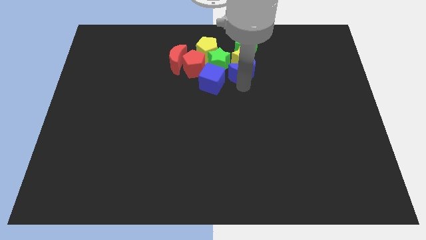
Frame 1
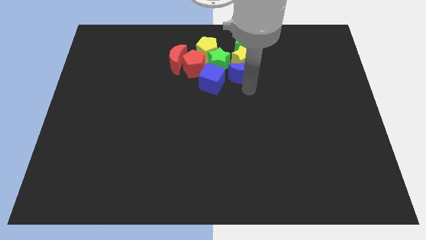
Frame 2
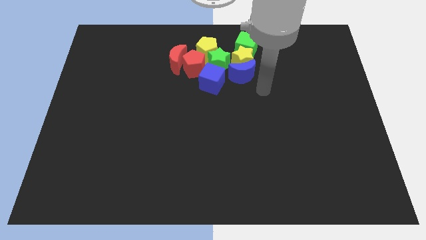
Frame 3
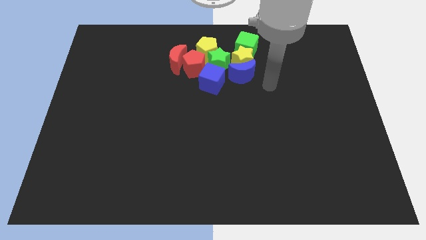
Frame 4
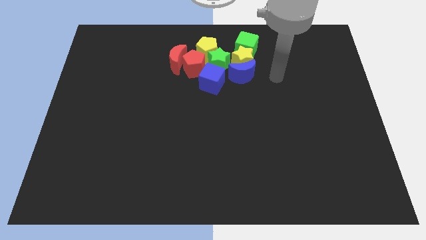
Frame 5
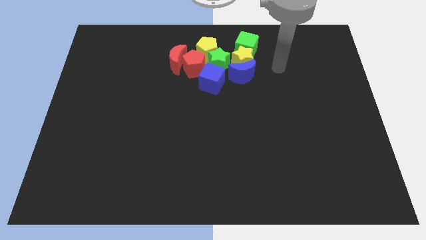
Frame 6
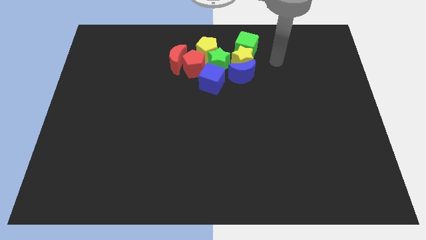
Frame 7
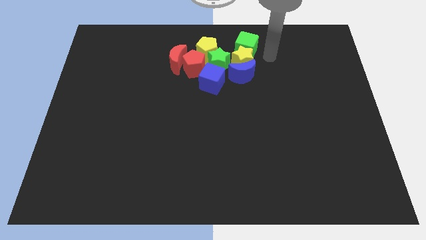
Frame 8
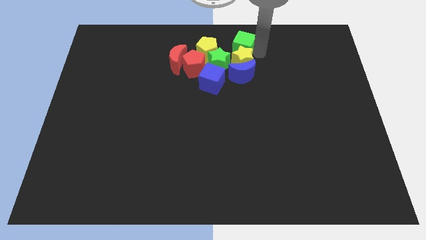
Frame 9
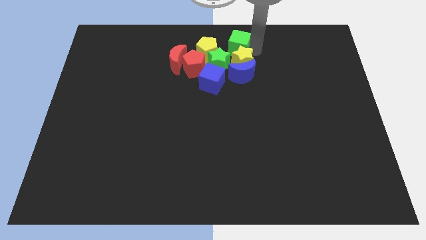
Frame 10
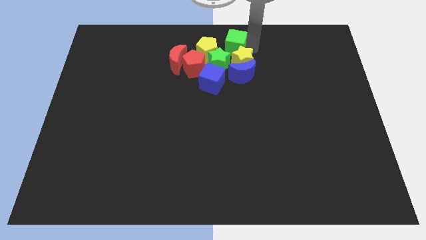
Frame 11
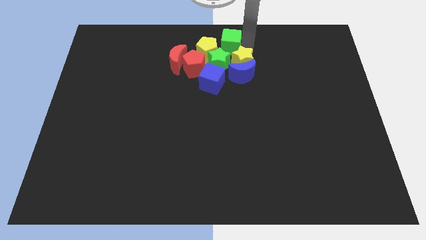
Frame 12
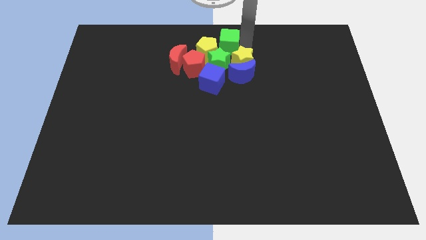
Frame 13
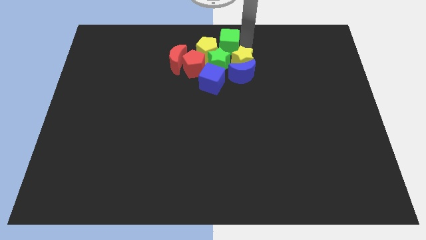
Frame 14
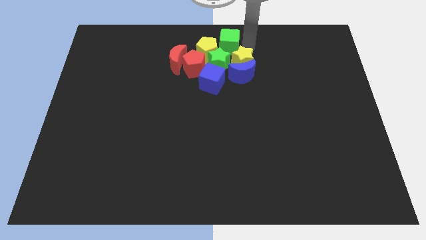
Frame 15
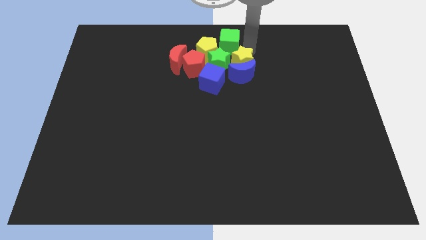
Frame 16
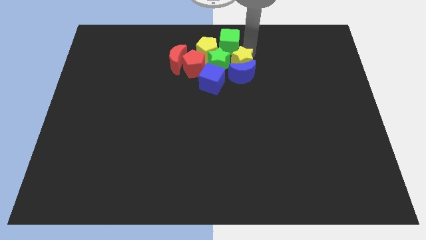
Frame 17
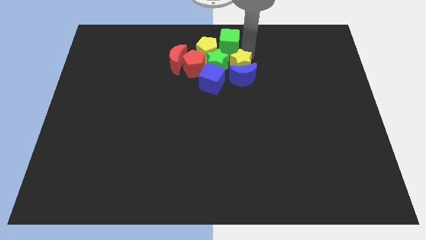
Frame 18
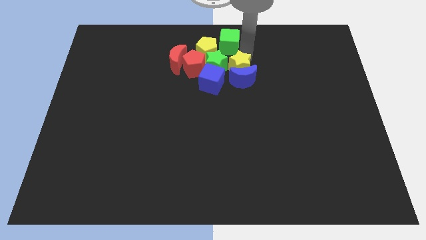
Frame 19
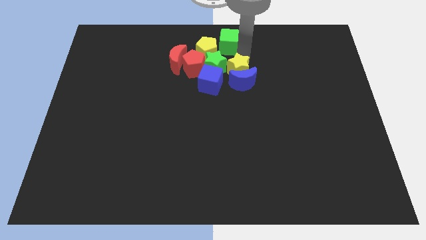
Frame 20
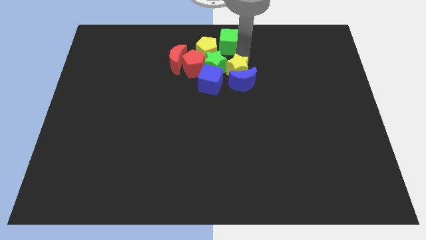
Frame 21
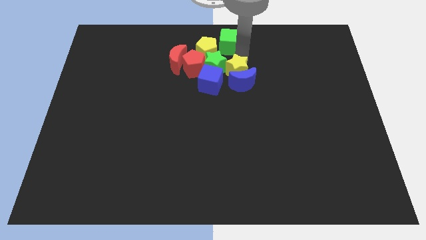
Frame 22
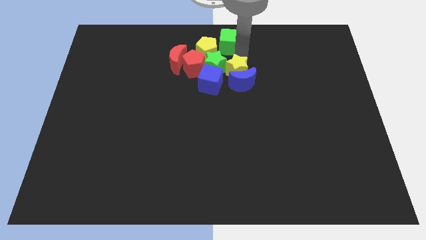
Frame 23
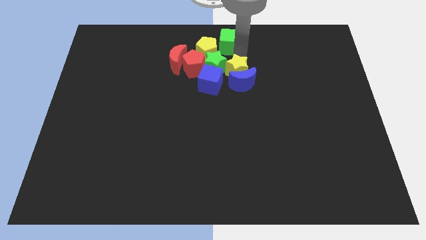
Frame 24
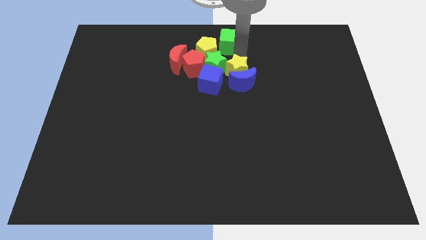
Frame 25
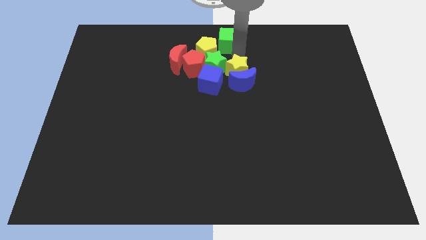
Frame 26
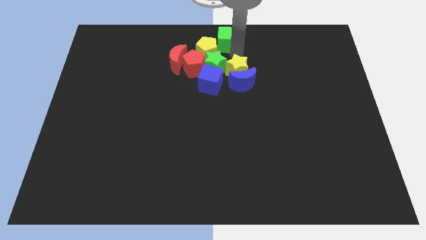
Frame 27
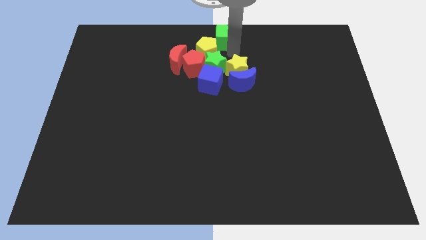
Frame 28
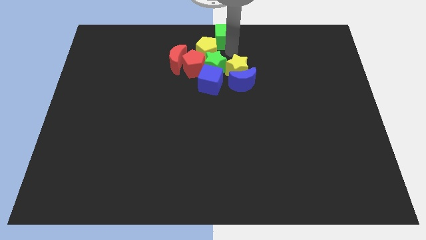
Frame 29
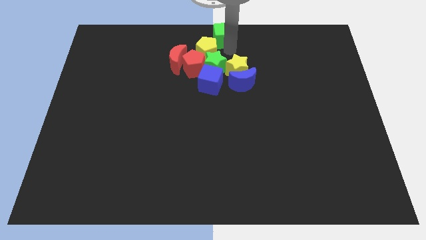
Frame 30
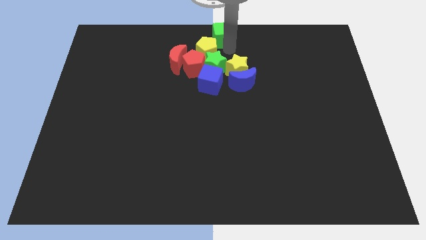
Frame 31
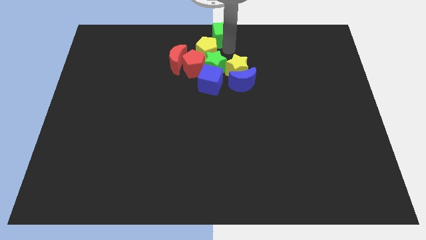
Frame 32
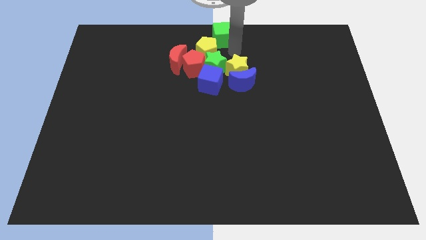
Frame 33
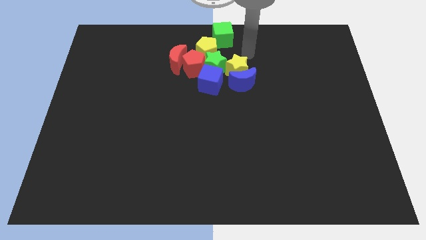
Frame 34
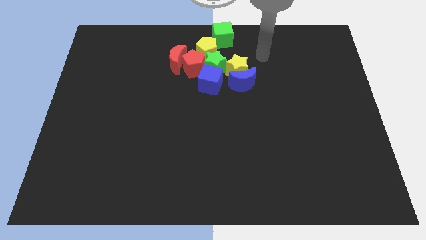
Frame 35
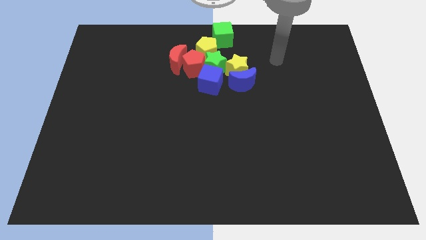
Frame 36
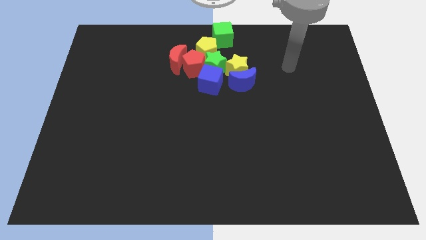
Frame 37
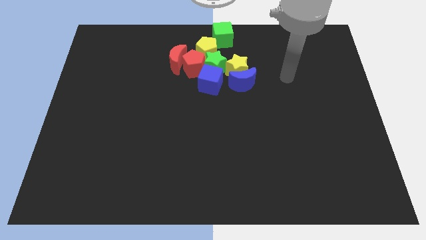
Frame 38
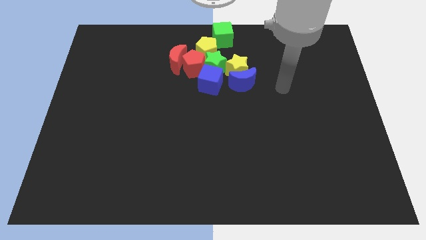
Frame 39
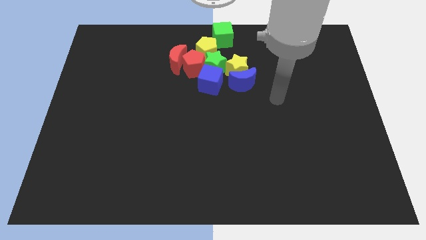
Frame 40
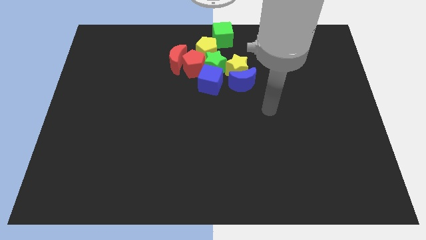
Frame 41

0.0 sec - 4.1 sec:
push green cube to the top center

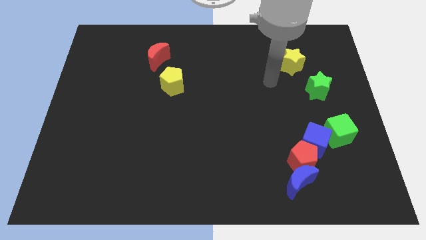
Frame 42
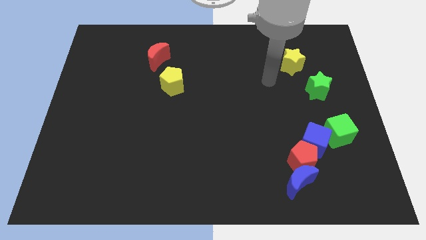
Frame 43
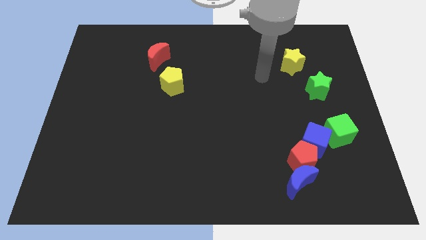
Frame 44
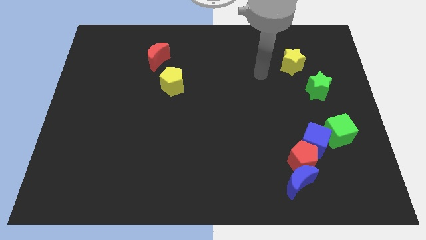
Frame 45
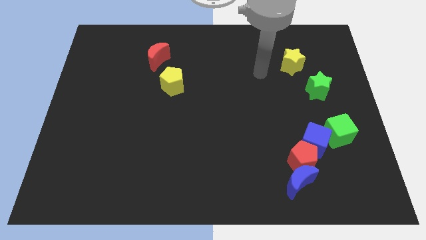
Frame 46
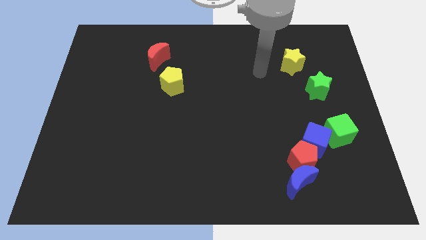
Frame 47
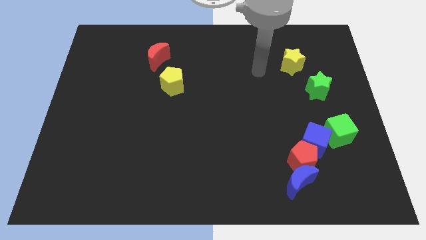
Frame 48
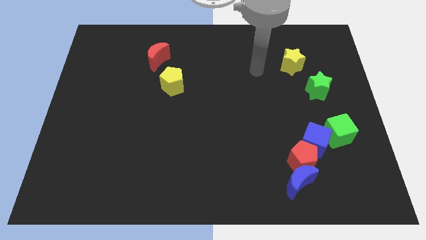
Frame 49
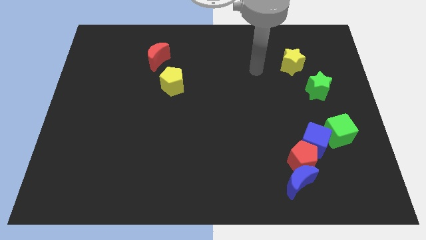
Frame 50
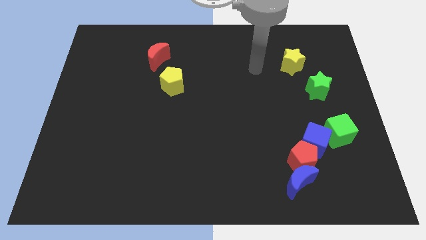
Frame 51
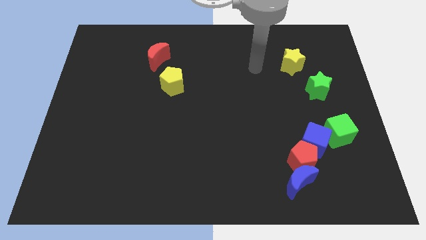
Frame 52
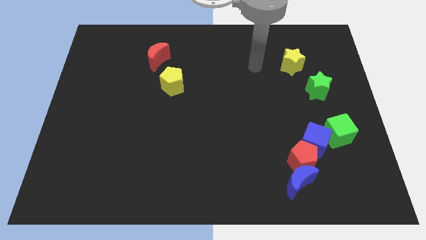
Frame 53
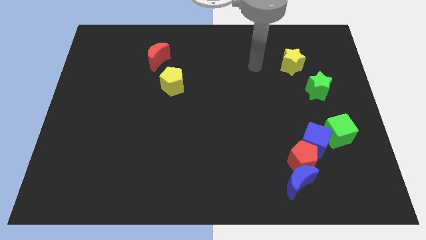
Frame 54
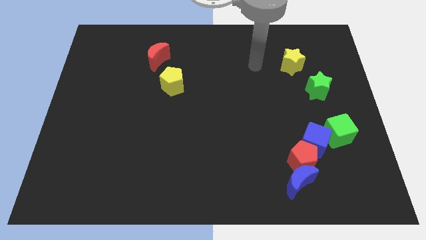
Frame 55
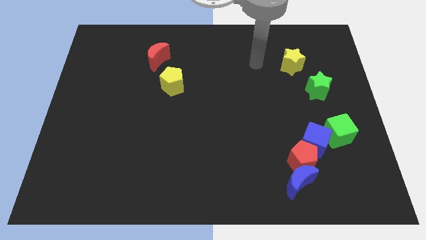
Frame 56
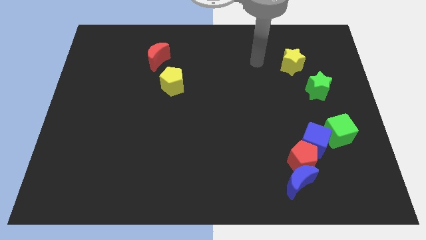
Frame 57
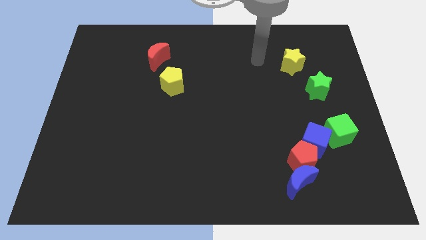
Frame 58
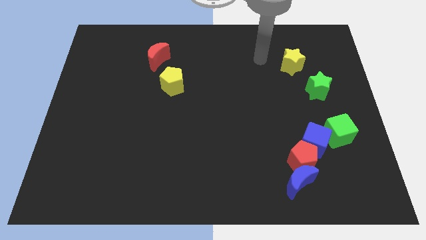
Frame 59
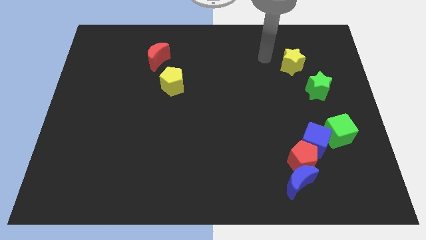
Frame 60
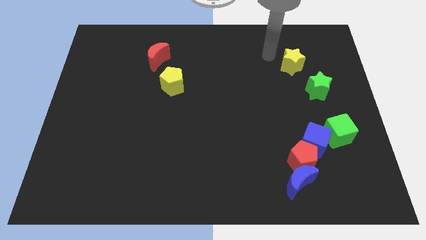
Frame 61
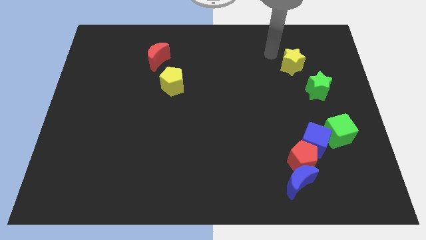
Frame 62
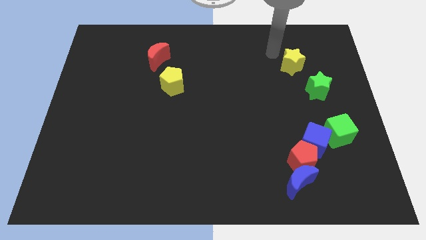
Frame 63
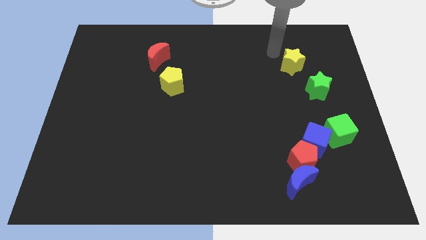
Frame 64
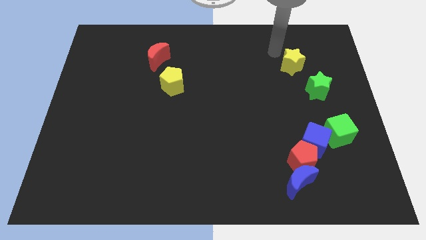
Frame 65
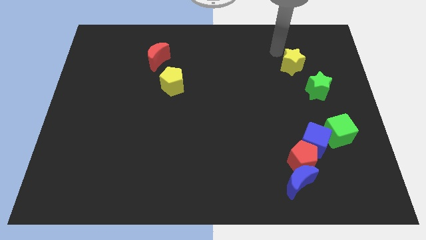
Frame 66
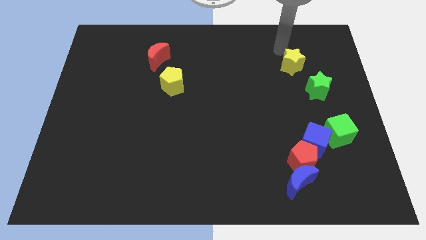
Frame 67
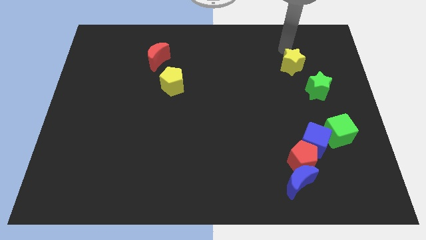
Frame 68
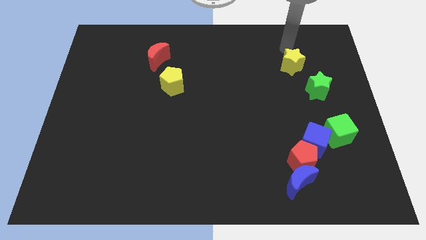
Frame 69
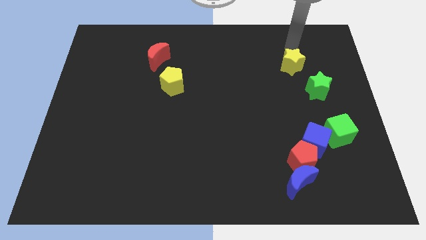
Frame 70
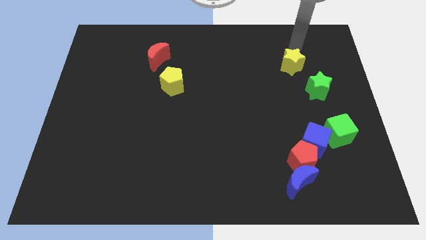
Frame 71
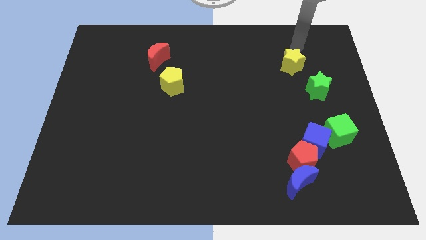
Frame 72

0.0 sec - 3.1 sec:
point your arm at the top of the yellow star

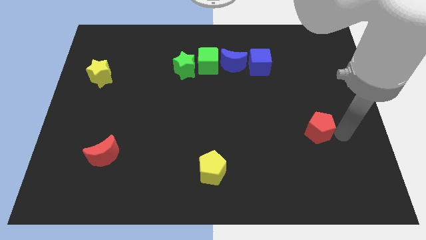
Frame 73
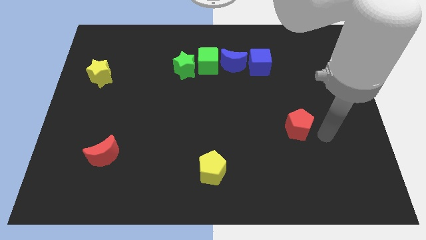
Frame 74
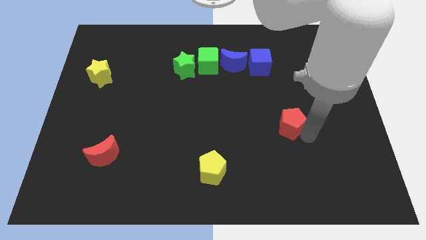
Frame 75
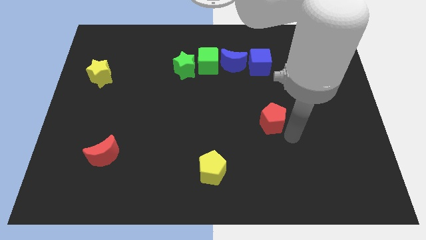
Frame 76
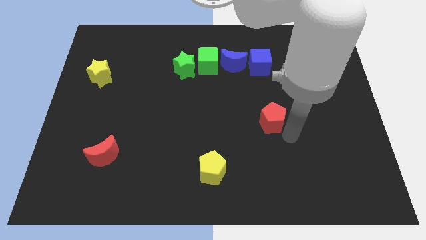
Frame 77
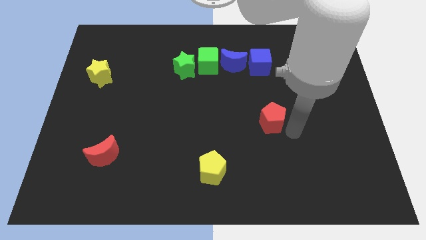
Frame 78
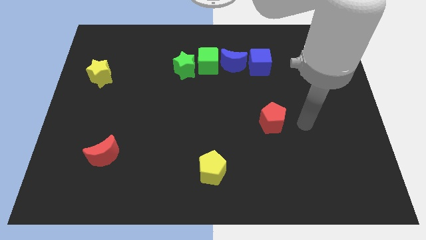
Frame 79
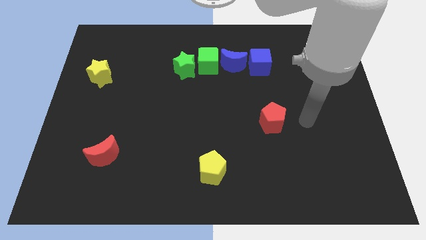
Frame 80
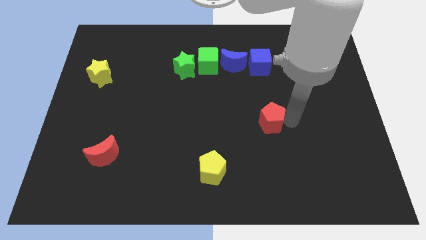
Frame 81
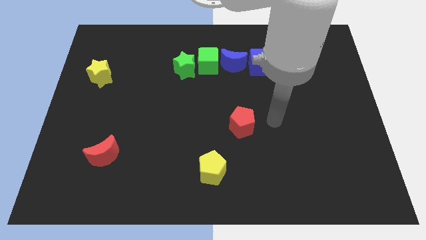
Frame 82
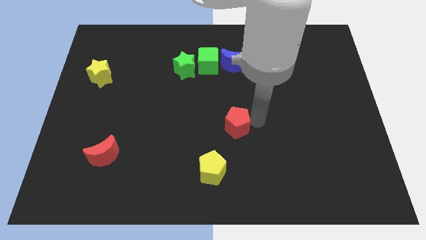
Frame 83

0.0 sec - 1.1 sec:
place the red pentagon to the bottom of the blue moon

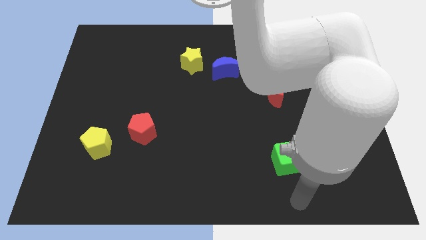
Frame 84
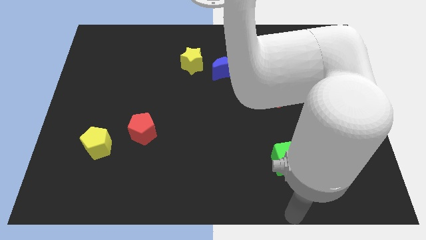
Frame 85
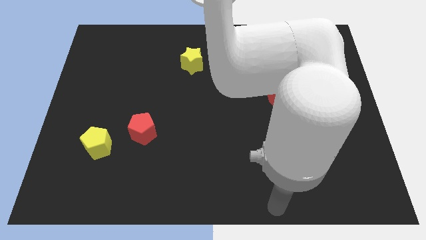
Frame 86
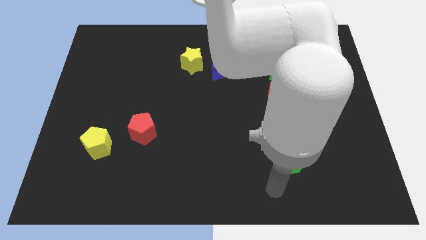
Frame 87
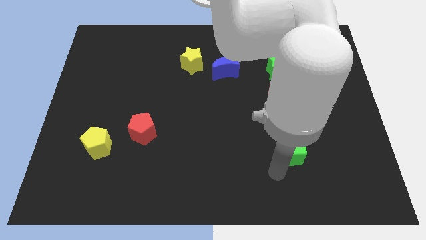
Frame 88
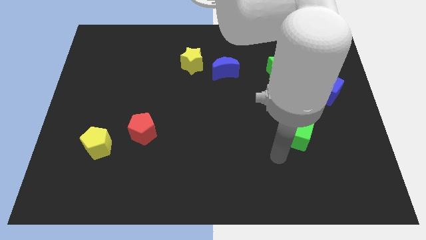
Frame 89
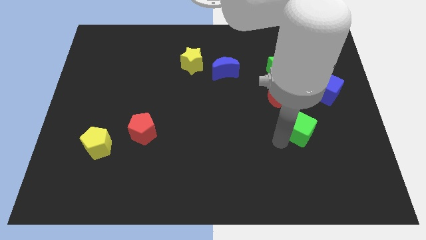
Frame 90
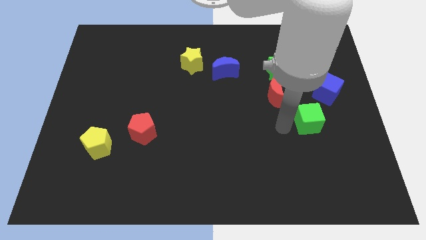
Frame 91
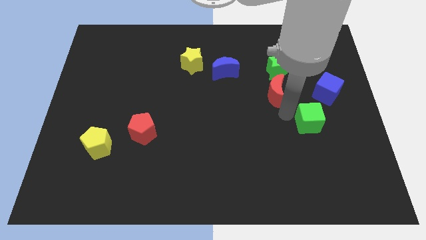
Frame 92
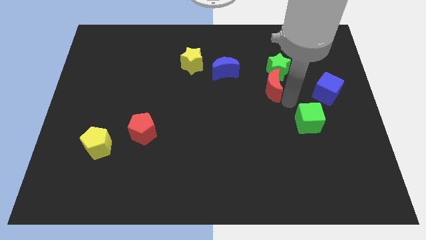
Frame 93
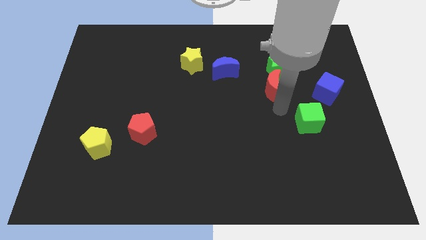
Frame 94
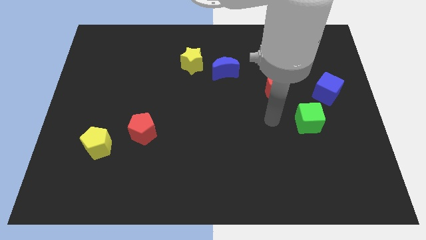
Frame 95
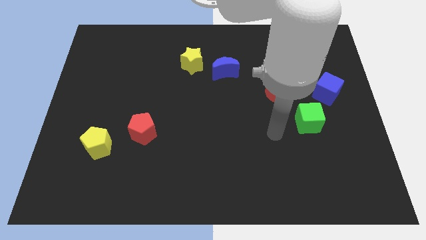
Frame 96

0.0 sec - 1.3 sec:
move the green cube towards the right center of the board
